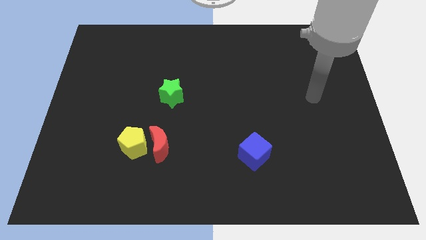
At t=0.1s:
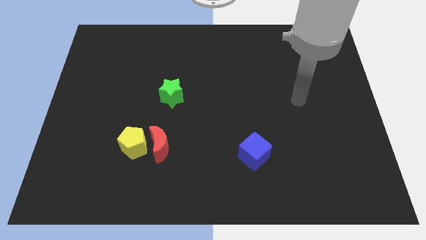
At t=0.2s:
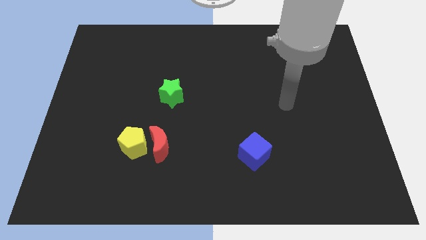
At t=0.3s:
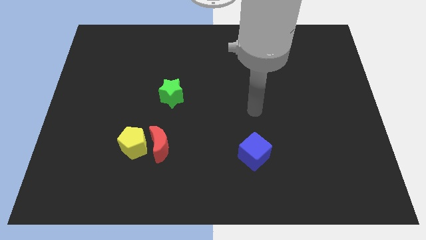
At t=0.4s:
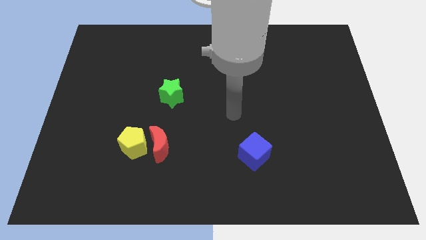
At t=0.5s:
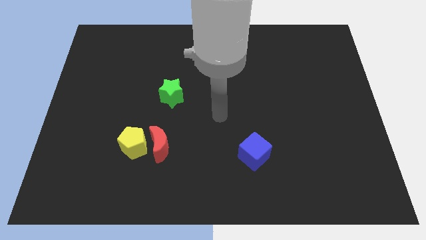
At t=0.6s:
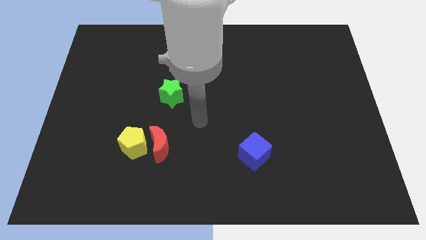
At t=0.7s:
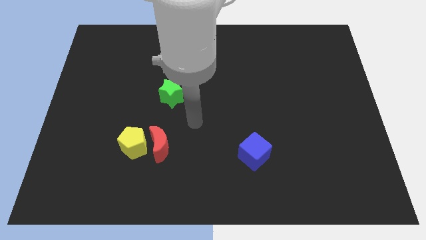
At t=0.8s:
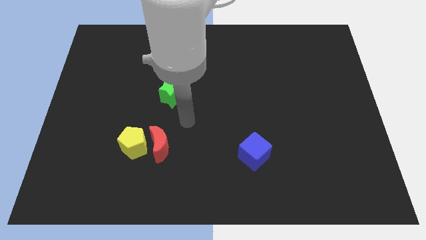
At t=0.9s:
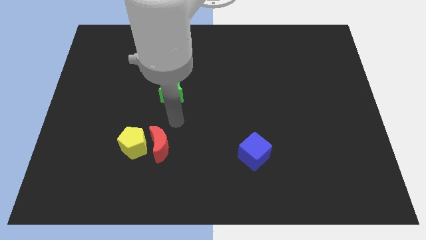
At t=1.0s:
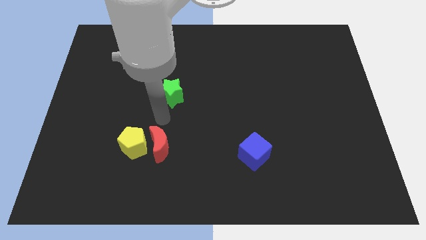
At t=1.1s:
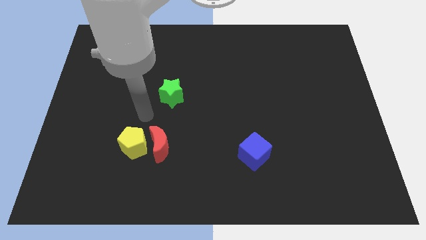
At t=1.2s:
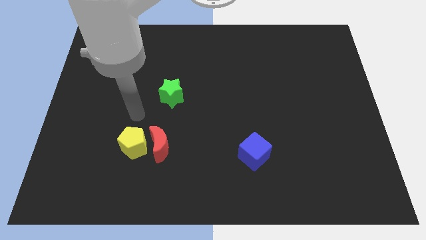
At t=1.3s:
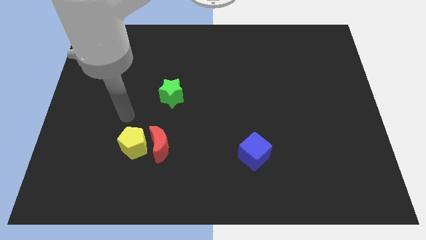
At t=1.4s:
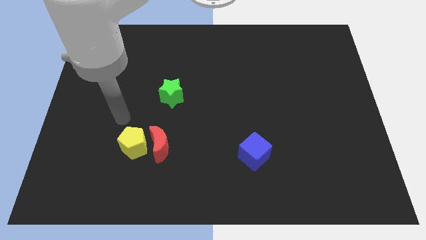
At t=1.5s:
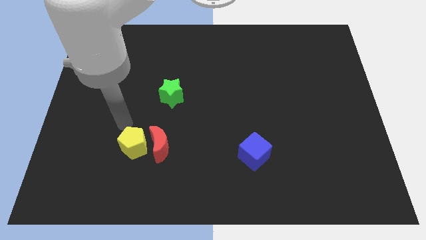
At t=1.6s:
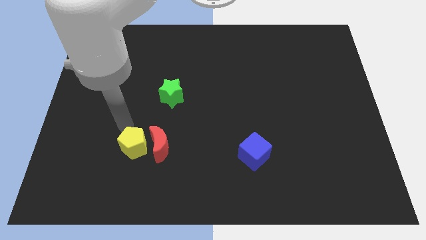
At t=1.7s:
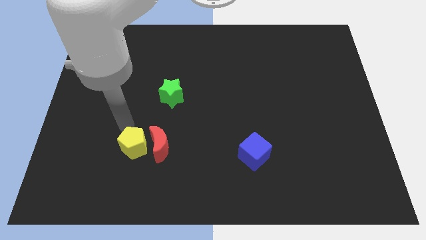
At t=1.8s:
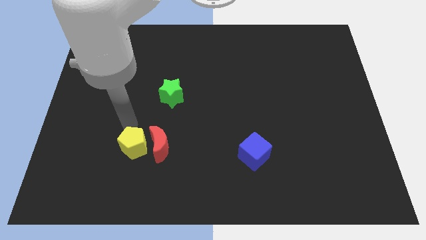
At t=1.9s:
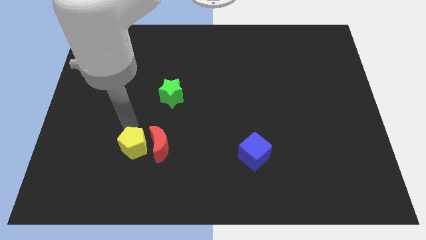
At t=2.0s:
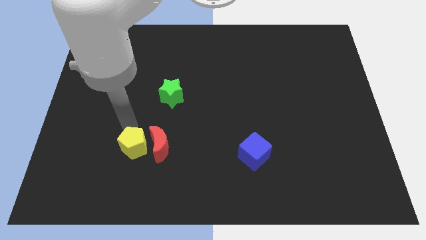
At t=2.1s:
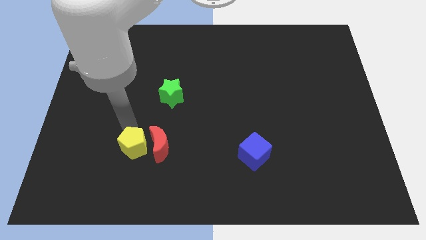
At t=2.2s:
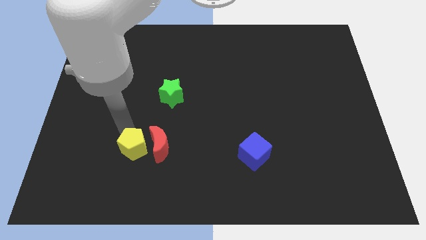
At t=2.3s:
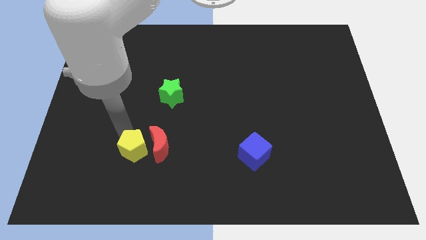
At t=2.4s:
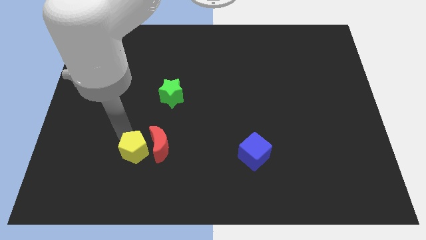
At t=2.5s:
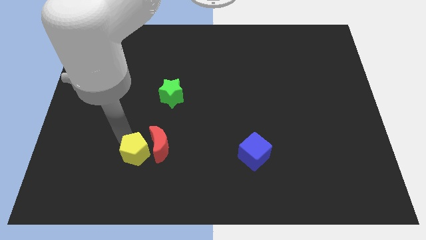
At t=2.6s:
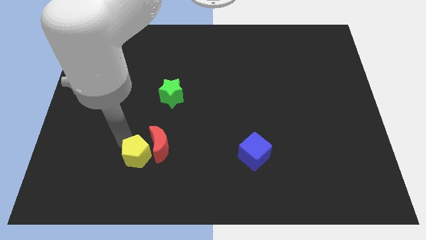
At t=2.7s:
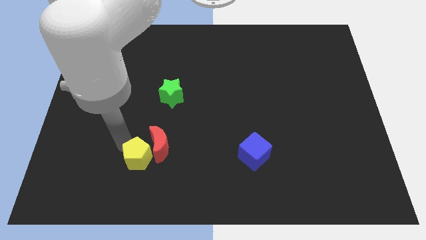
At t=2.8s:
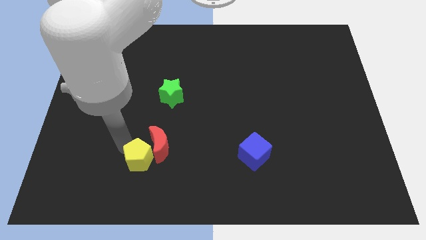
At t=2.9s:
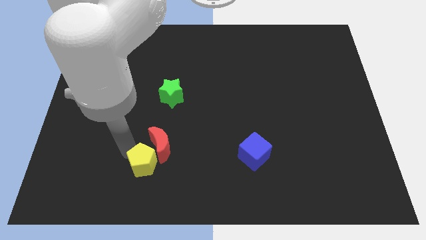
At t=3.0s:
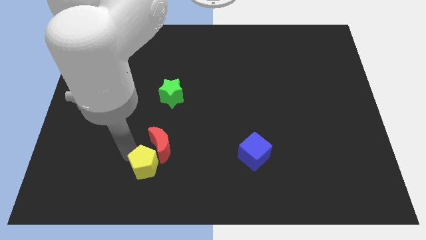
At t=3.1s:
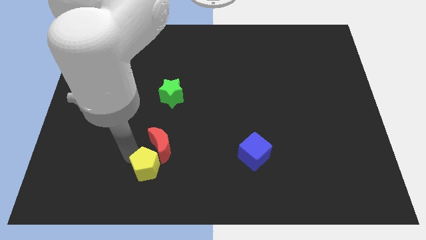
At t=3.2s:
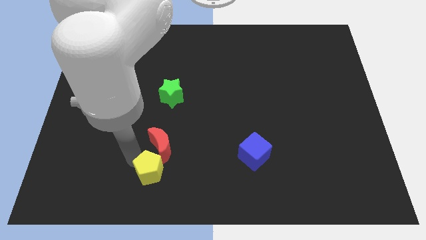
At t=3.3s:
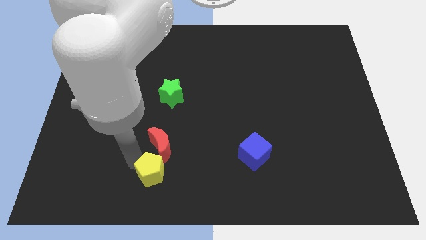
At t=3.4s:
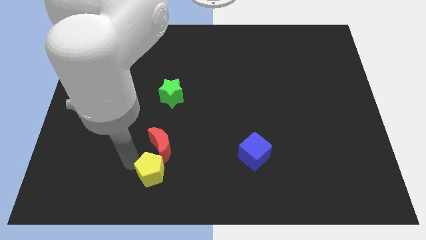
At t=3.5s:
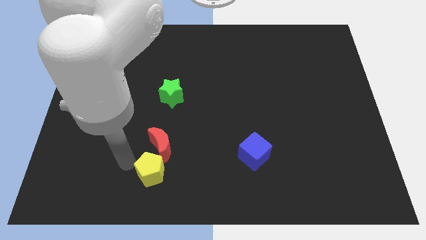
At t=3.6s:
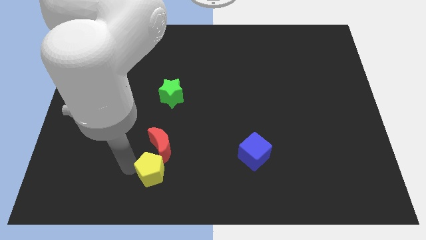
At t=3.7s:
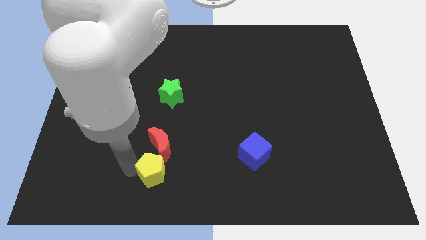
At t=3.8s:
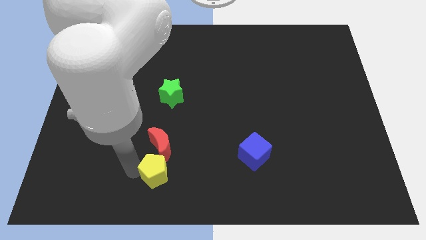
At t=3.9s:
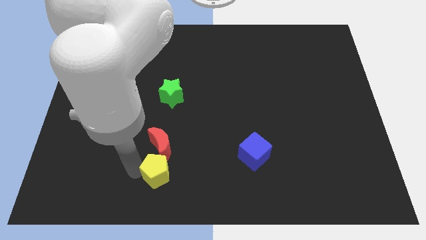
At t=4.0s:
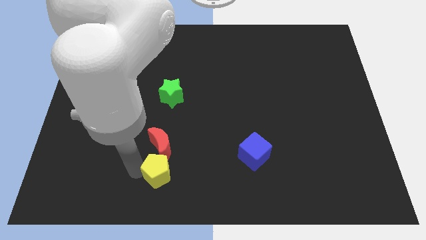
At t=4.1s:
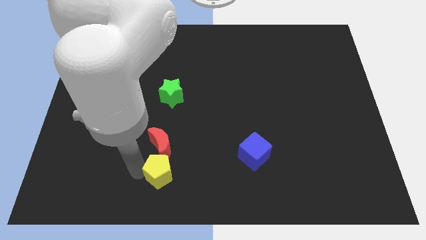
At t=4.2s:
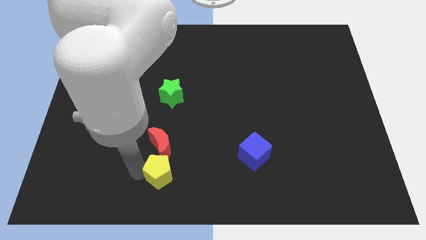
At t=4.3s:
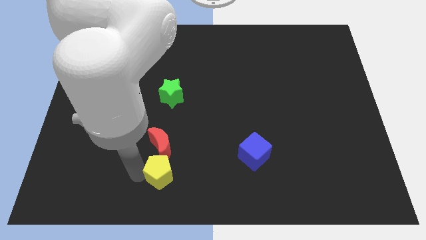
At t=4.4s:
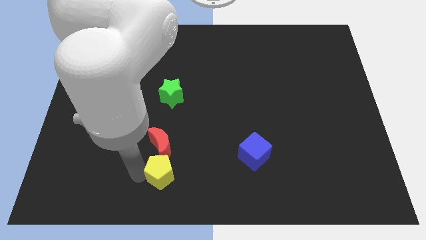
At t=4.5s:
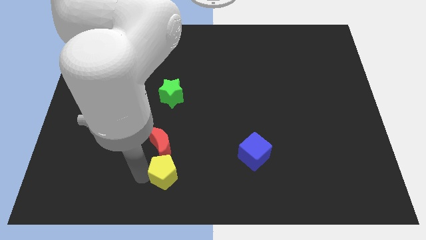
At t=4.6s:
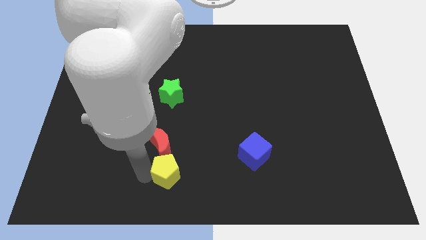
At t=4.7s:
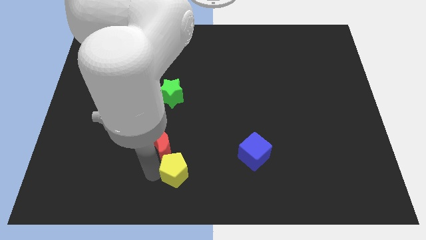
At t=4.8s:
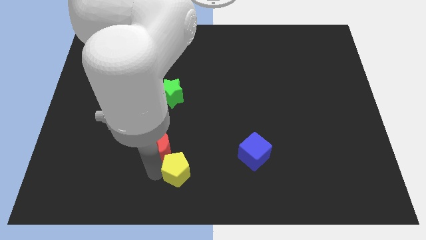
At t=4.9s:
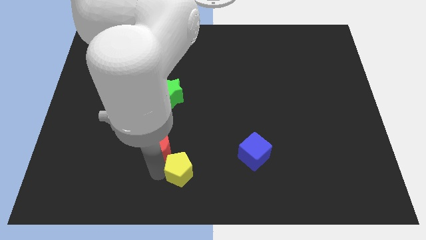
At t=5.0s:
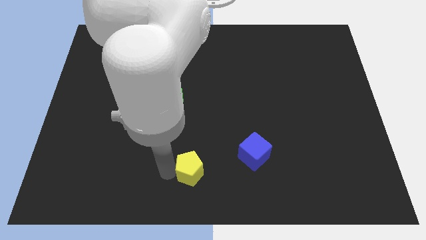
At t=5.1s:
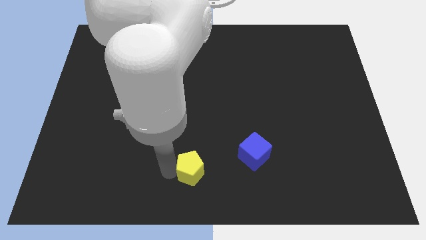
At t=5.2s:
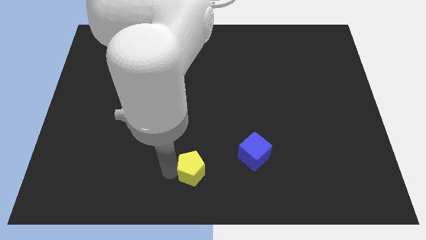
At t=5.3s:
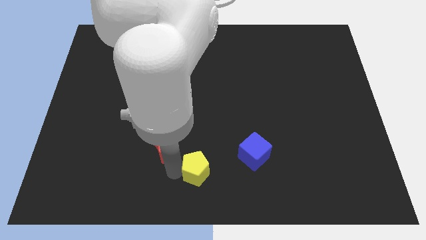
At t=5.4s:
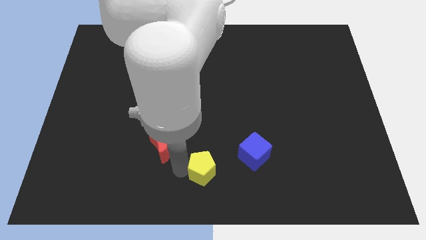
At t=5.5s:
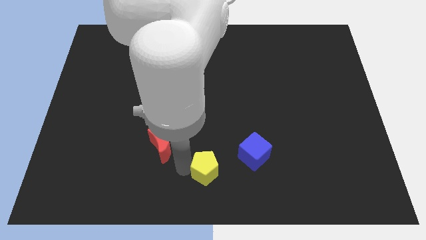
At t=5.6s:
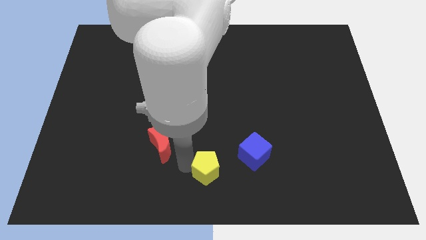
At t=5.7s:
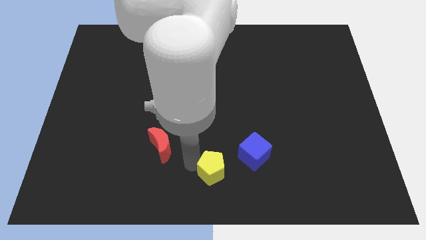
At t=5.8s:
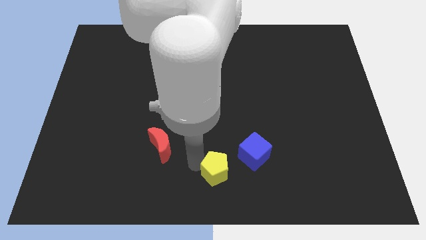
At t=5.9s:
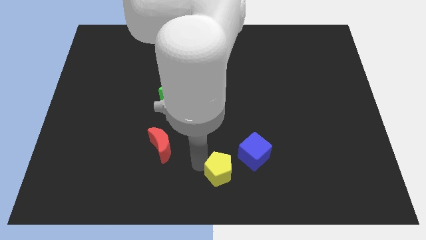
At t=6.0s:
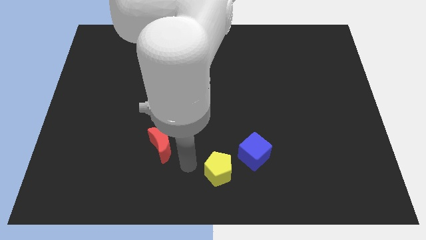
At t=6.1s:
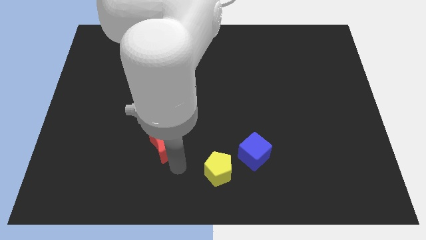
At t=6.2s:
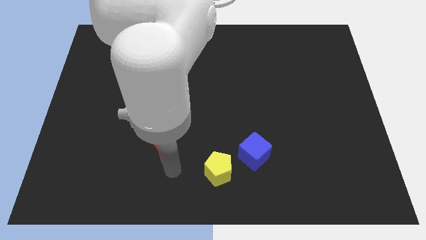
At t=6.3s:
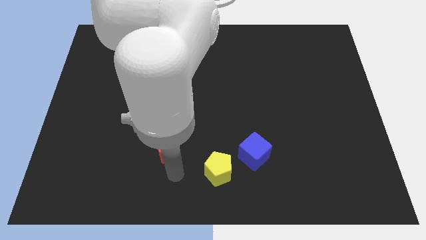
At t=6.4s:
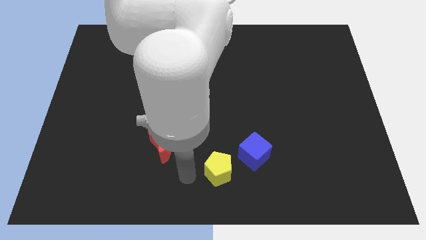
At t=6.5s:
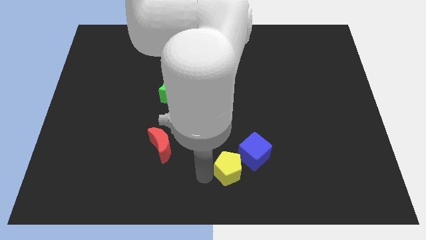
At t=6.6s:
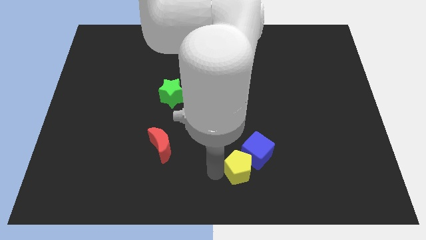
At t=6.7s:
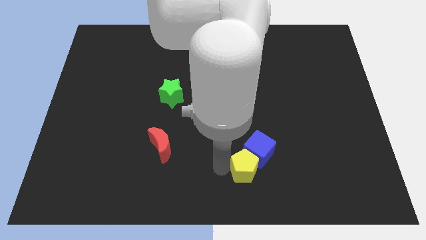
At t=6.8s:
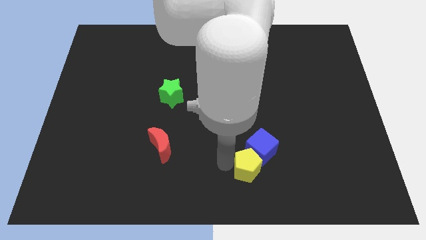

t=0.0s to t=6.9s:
put the pentagon close to the blue cube

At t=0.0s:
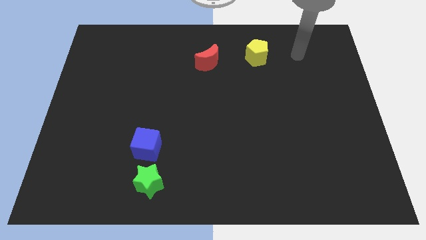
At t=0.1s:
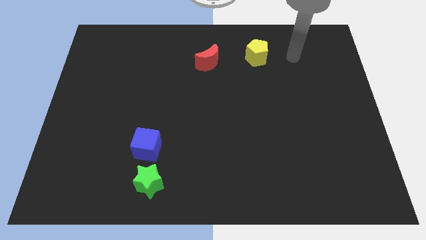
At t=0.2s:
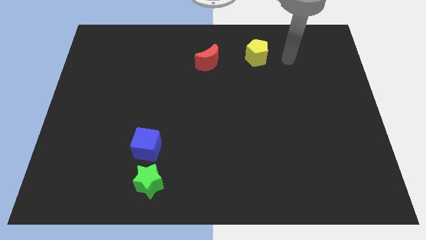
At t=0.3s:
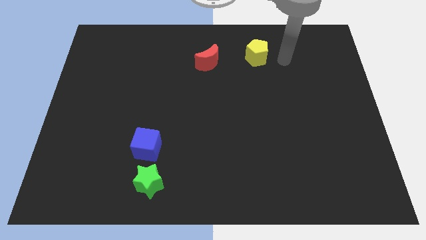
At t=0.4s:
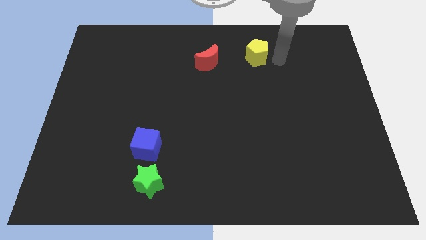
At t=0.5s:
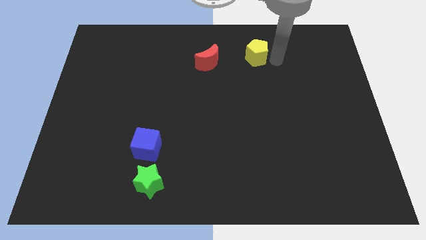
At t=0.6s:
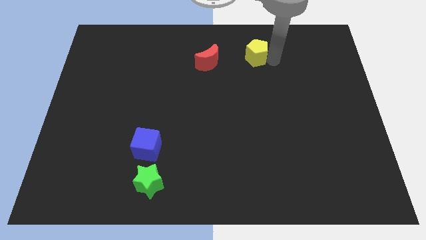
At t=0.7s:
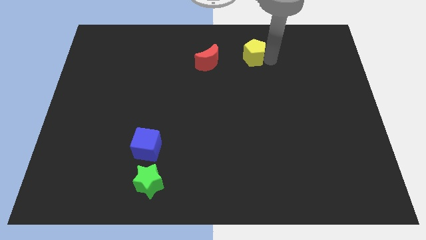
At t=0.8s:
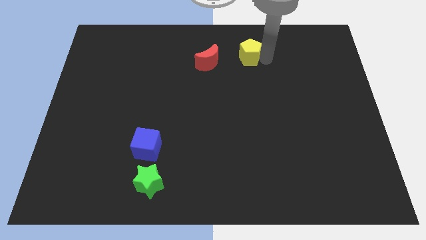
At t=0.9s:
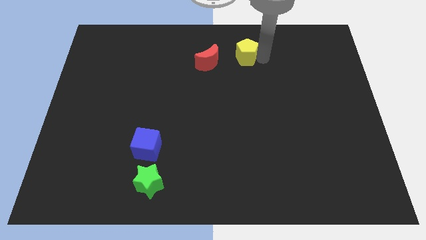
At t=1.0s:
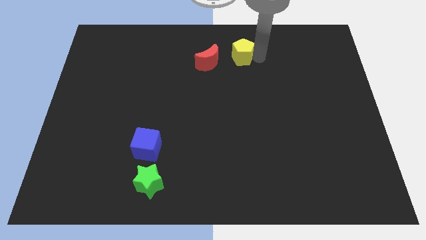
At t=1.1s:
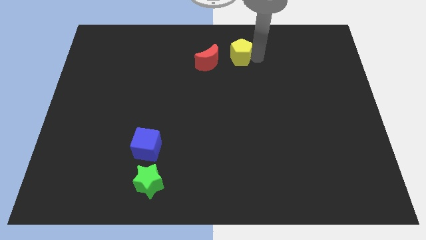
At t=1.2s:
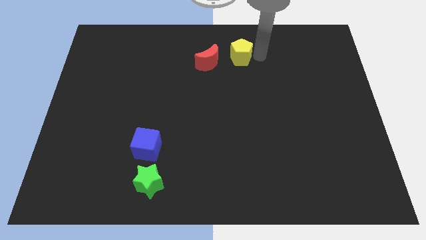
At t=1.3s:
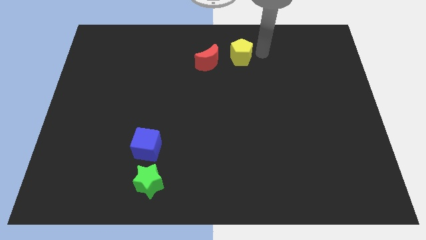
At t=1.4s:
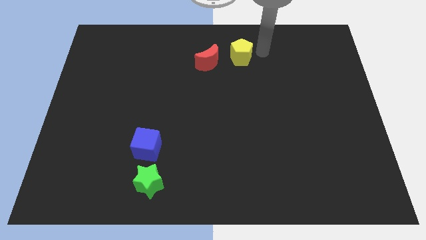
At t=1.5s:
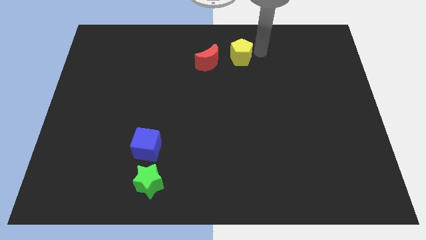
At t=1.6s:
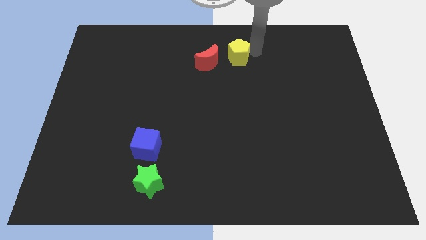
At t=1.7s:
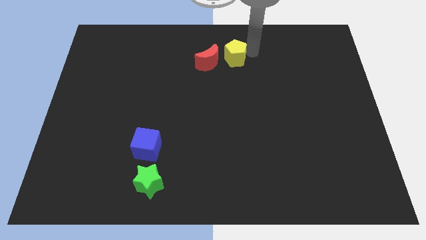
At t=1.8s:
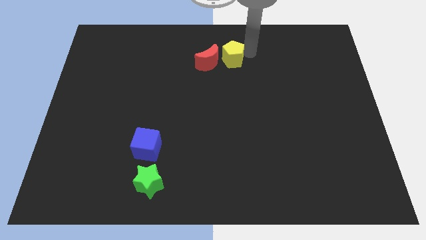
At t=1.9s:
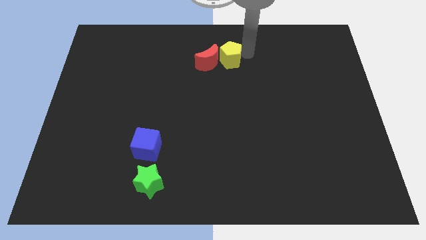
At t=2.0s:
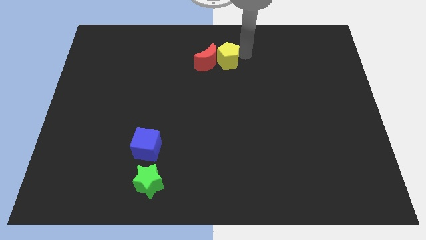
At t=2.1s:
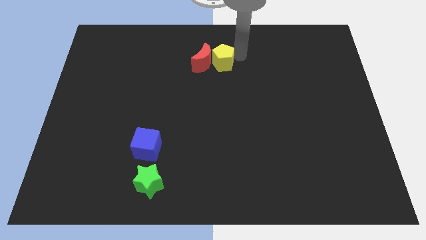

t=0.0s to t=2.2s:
push the yellow pentagon next to the red moon
